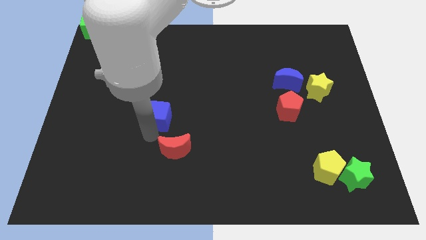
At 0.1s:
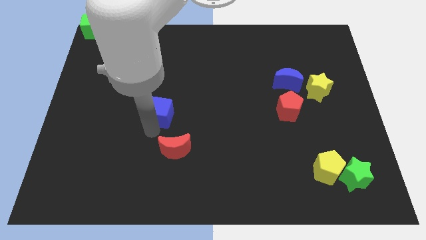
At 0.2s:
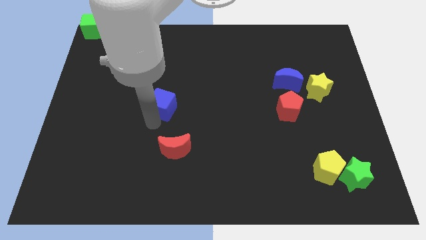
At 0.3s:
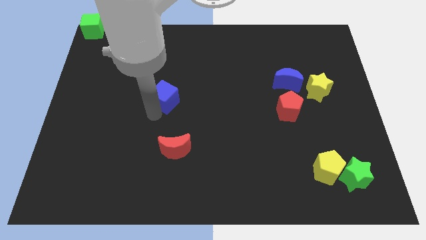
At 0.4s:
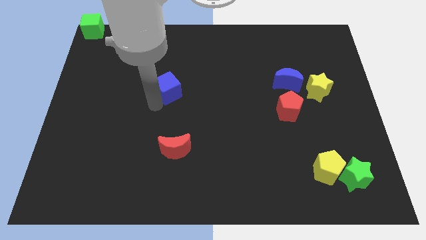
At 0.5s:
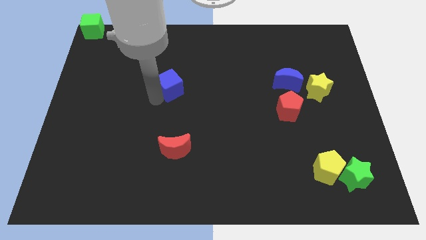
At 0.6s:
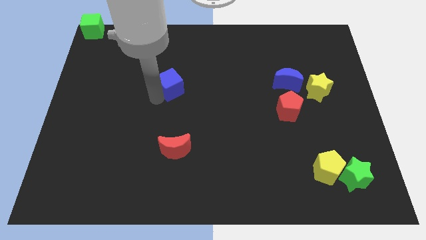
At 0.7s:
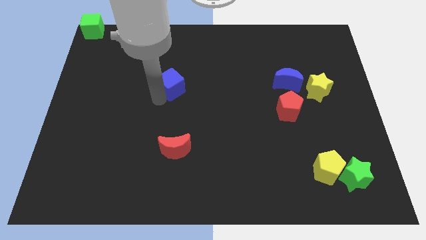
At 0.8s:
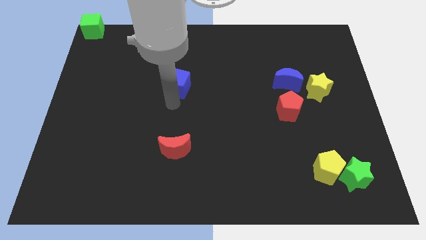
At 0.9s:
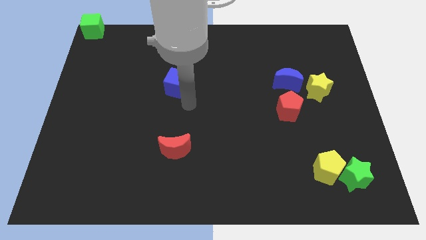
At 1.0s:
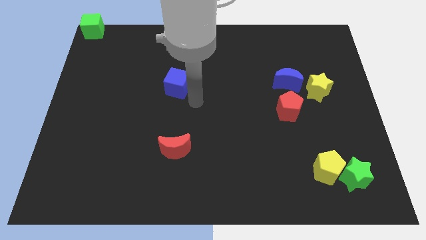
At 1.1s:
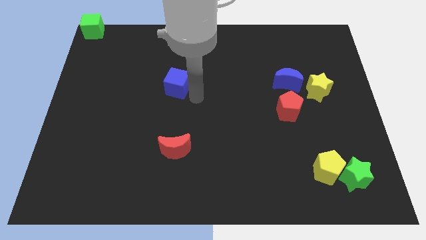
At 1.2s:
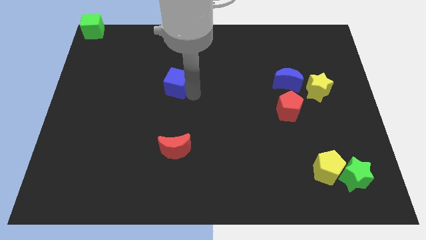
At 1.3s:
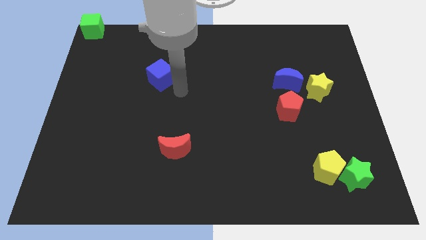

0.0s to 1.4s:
push the blue cube slightly upwards

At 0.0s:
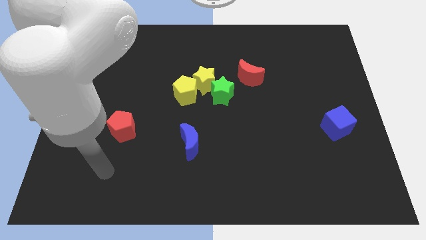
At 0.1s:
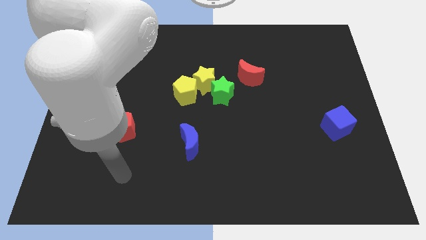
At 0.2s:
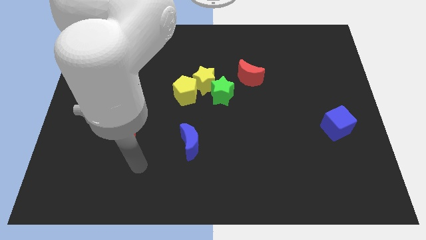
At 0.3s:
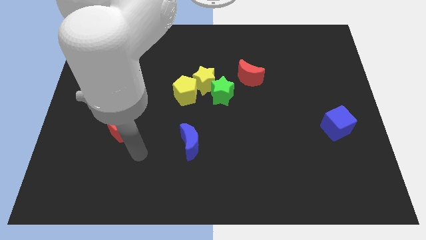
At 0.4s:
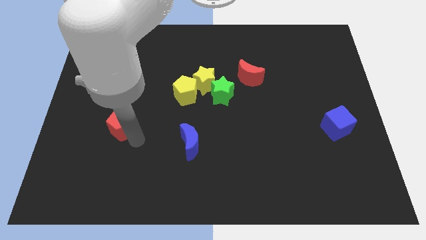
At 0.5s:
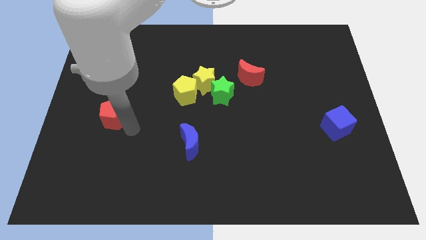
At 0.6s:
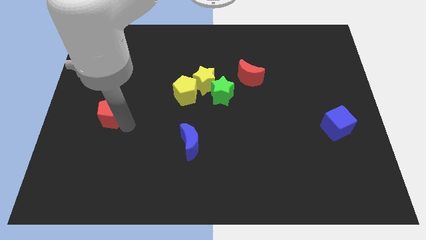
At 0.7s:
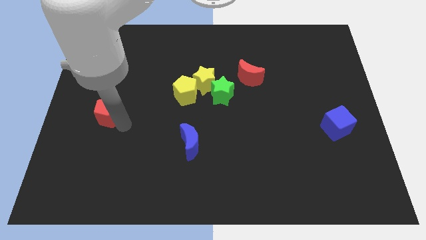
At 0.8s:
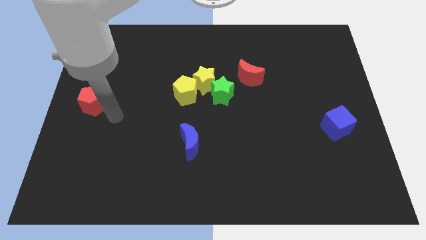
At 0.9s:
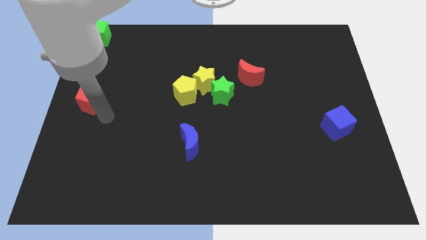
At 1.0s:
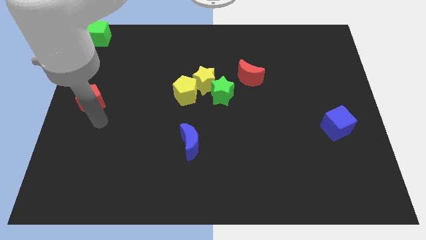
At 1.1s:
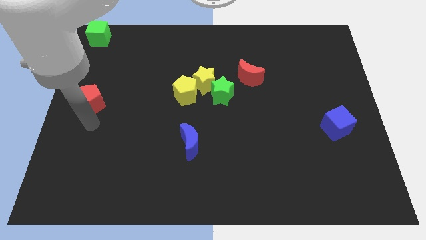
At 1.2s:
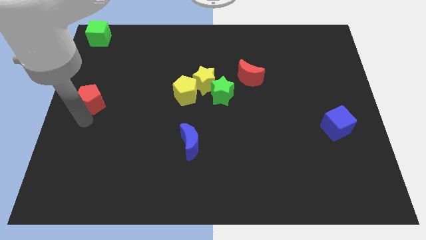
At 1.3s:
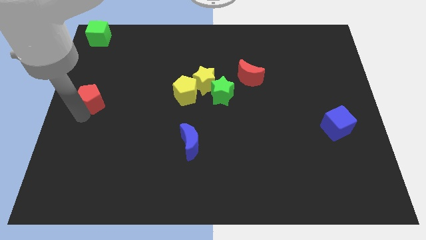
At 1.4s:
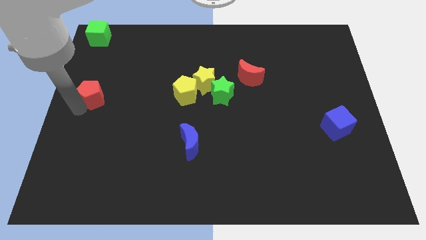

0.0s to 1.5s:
move the red pentagon parllel to the yellow pentagon

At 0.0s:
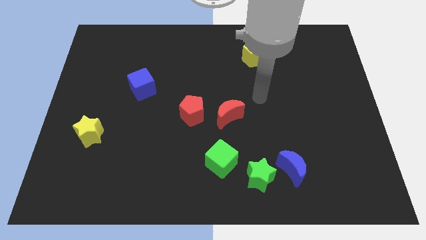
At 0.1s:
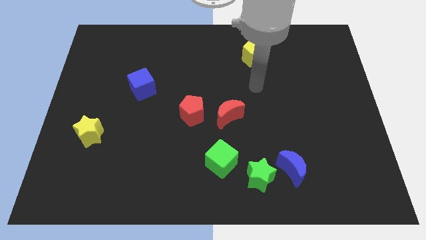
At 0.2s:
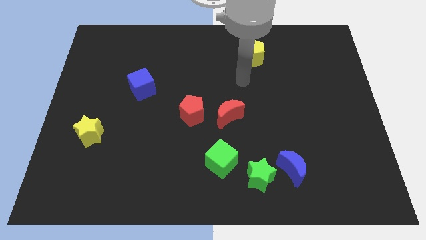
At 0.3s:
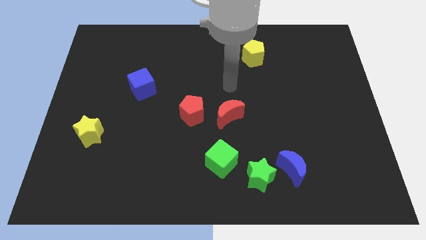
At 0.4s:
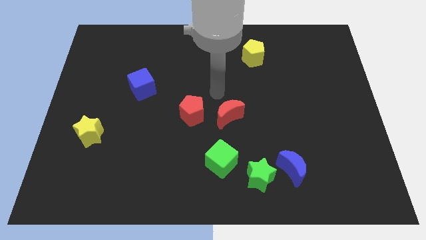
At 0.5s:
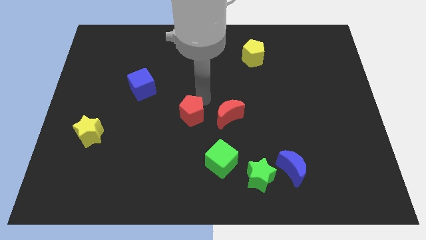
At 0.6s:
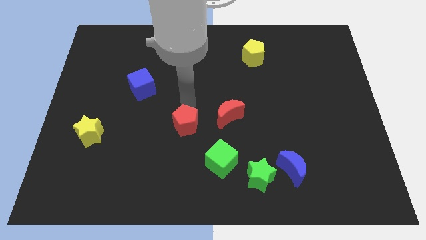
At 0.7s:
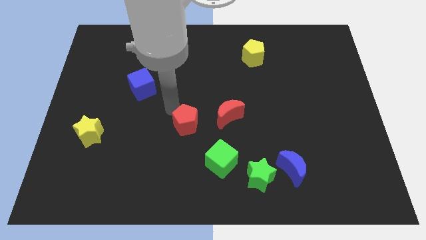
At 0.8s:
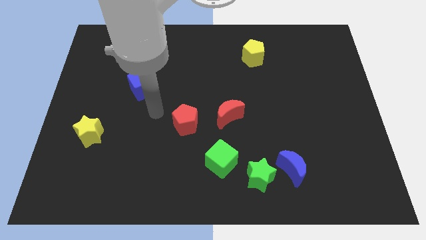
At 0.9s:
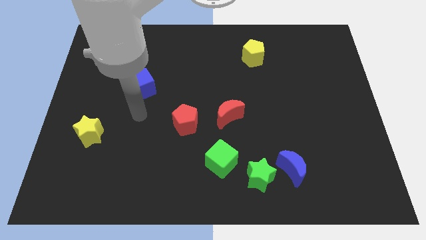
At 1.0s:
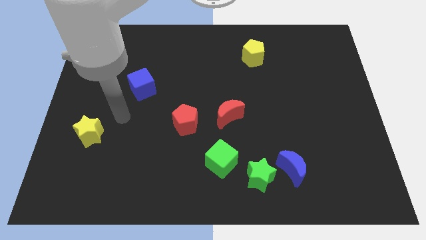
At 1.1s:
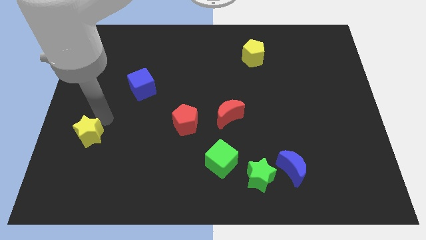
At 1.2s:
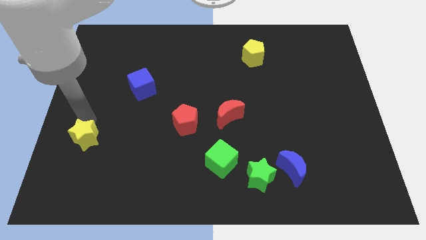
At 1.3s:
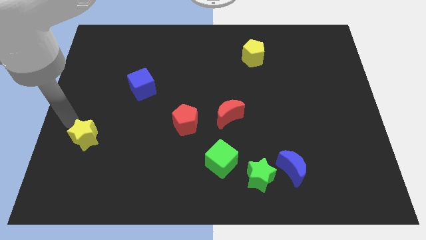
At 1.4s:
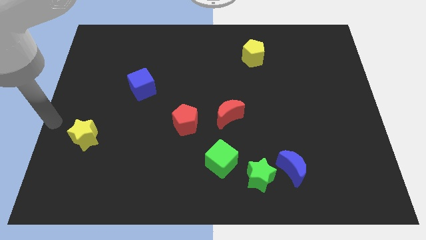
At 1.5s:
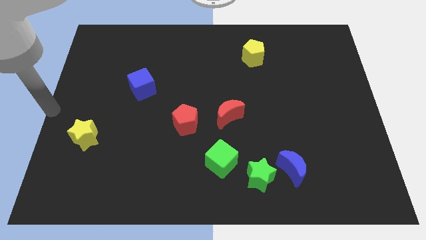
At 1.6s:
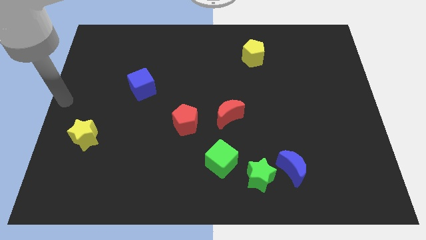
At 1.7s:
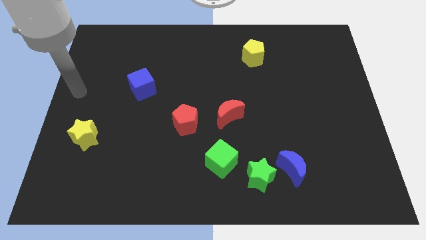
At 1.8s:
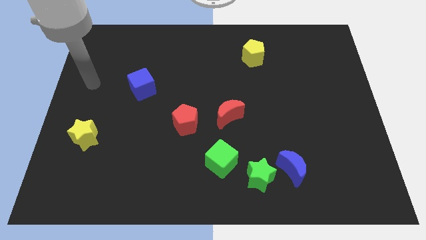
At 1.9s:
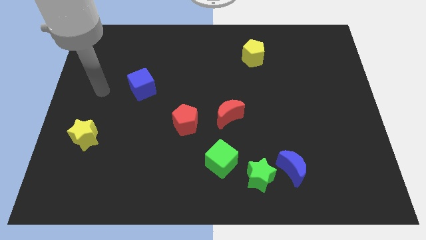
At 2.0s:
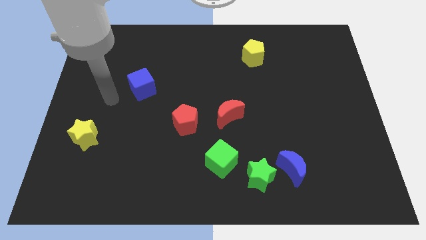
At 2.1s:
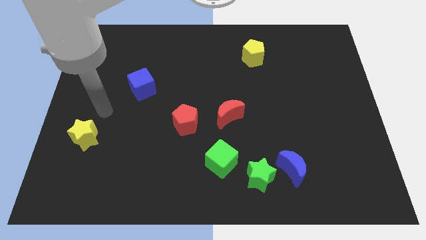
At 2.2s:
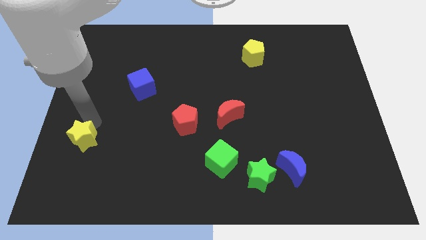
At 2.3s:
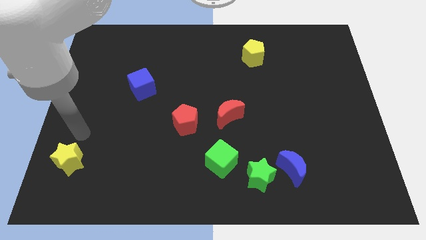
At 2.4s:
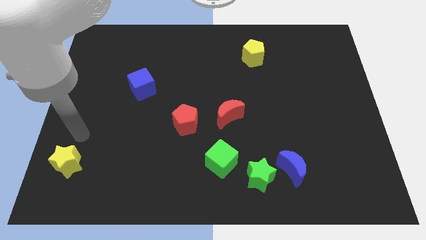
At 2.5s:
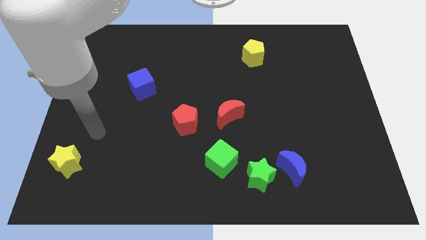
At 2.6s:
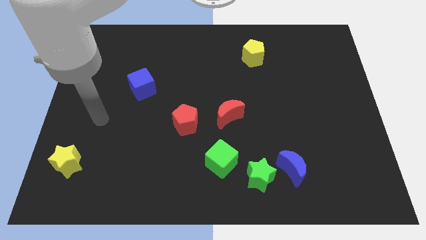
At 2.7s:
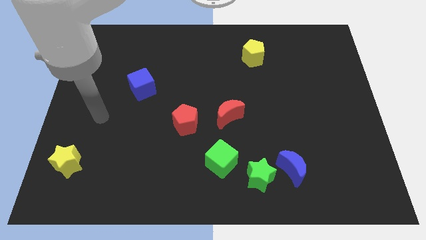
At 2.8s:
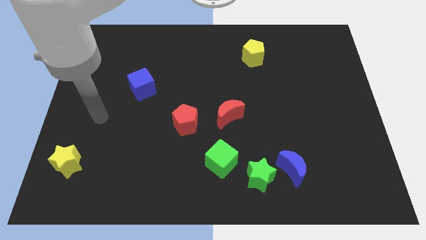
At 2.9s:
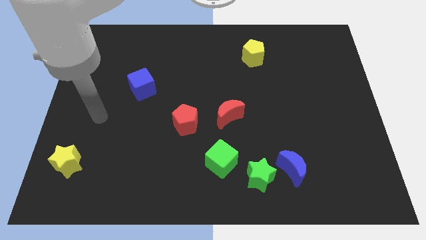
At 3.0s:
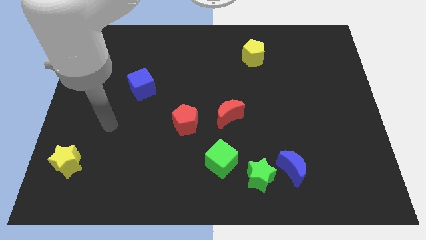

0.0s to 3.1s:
move the yellow star slightly to the bottom

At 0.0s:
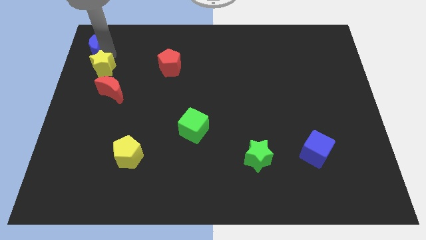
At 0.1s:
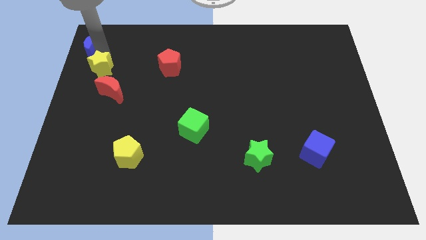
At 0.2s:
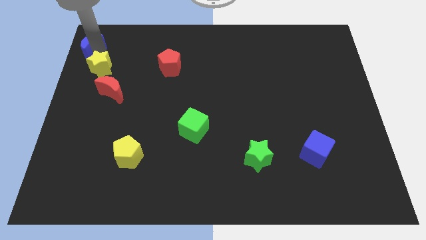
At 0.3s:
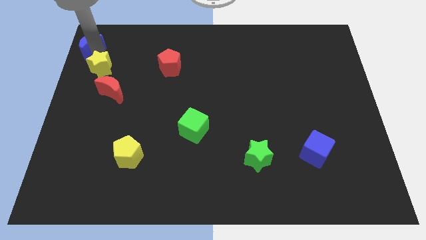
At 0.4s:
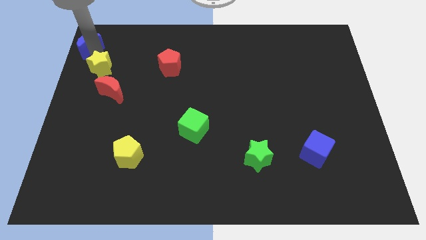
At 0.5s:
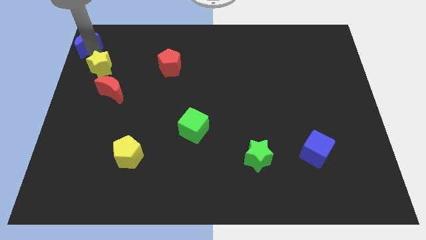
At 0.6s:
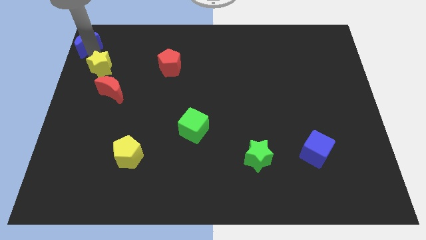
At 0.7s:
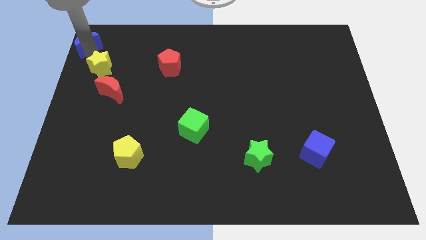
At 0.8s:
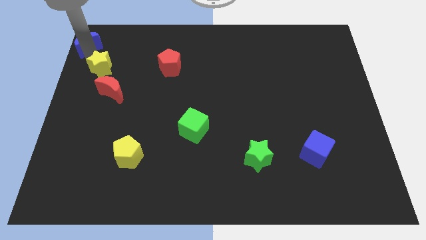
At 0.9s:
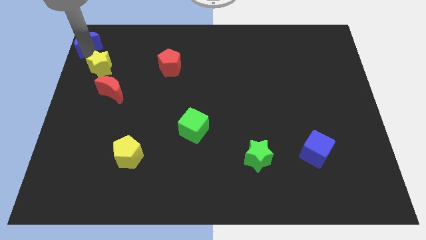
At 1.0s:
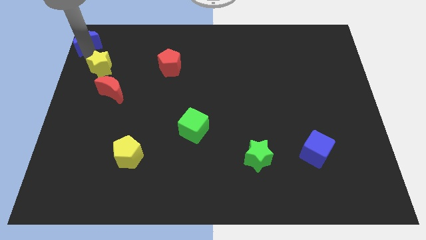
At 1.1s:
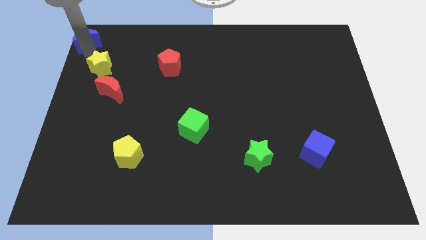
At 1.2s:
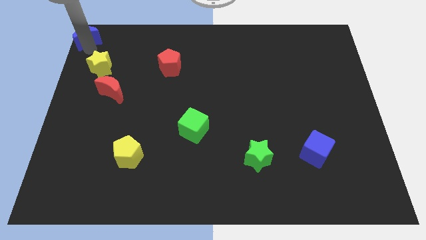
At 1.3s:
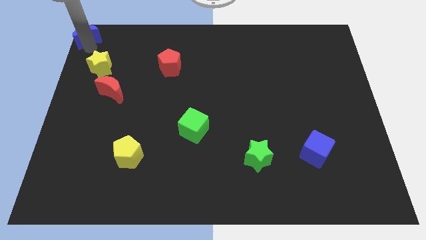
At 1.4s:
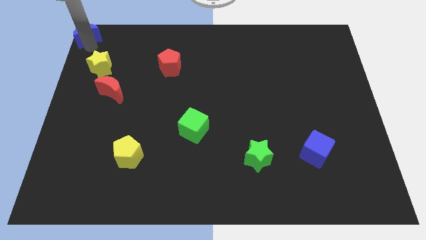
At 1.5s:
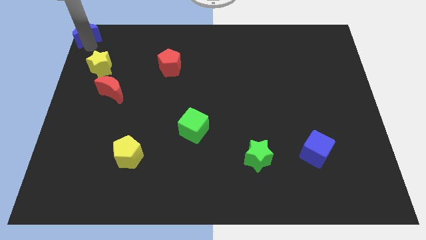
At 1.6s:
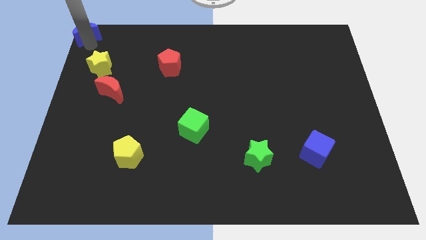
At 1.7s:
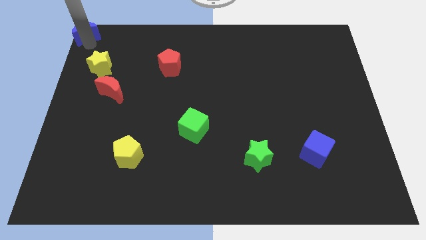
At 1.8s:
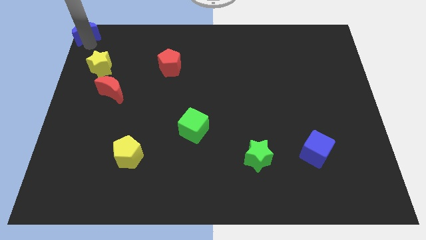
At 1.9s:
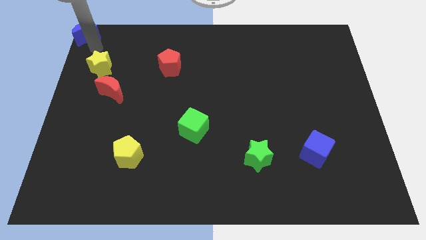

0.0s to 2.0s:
push the blue crescent to the top left corner of the table

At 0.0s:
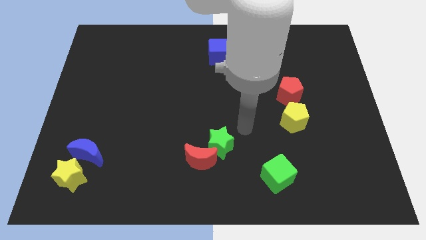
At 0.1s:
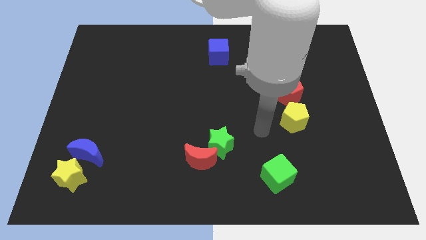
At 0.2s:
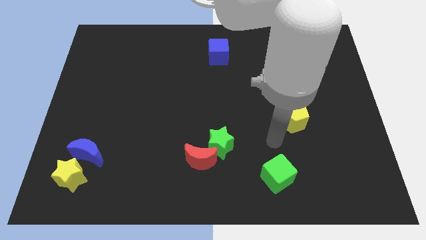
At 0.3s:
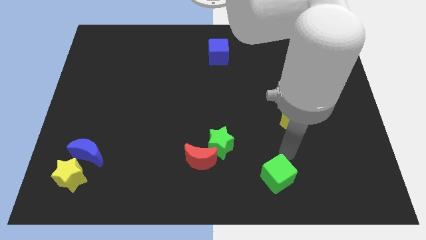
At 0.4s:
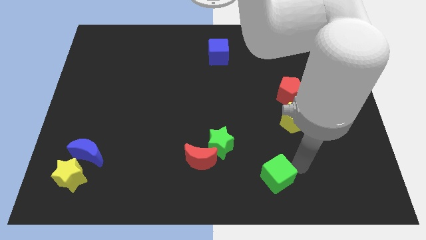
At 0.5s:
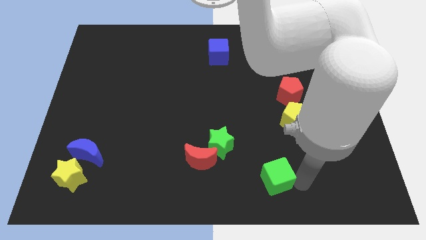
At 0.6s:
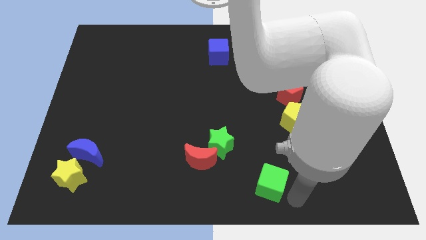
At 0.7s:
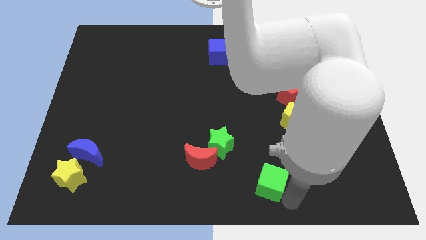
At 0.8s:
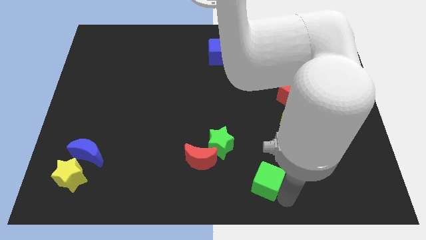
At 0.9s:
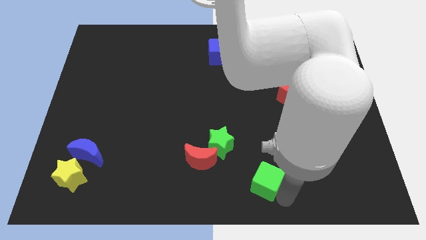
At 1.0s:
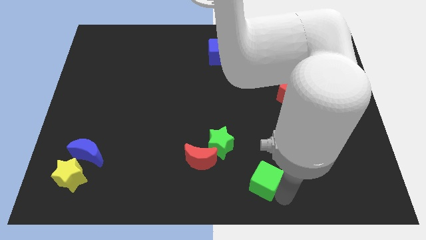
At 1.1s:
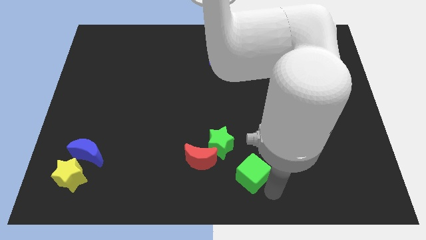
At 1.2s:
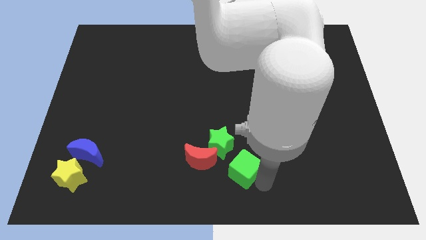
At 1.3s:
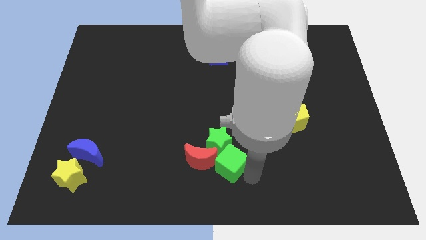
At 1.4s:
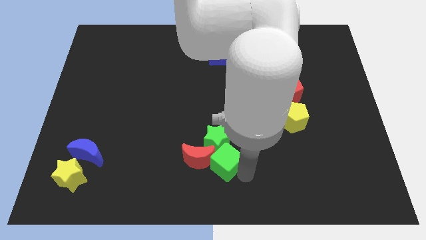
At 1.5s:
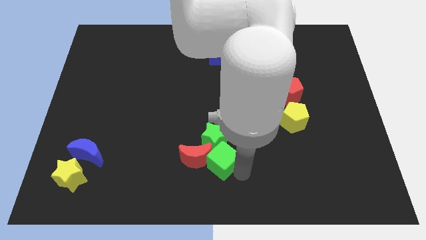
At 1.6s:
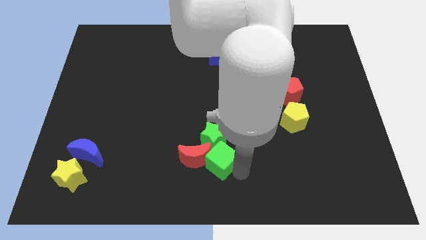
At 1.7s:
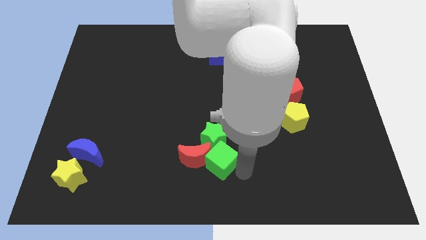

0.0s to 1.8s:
move the green cube to the bottom of the green star
